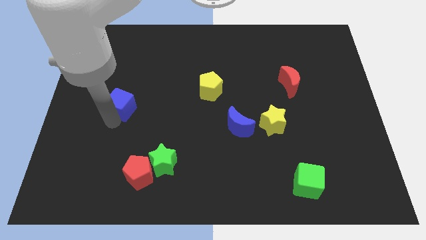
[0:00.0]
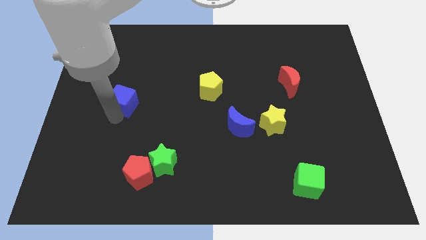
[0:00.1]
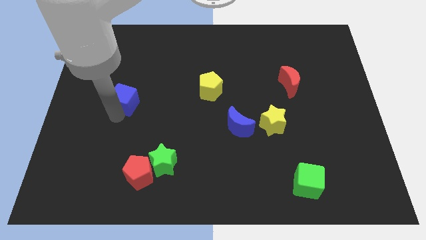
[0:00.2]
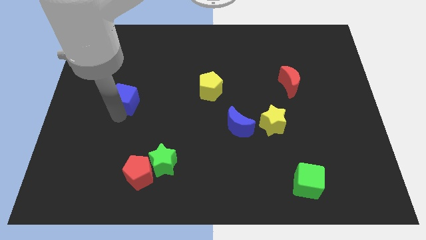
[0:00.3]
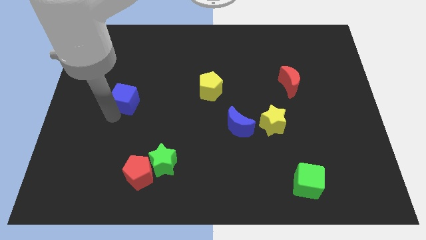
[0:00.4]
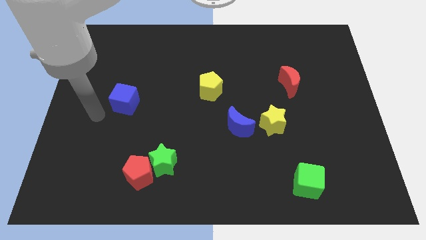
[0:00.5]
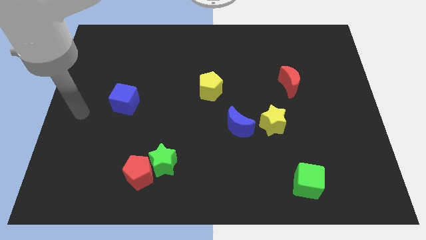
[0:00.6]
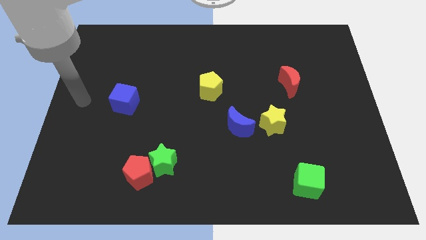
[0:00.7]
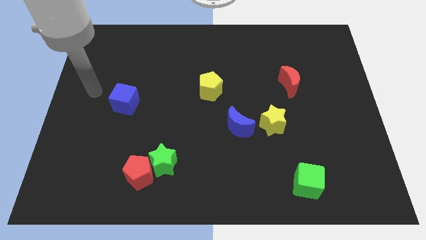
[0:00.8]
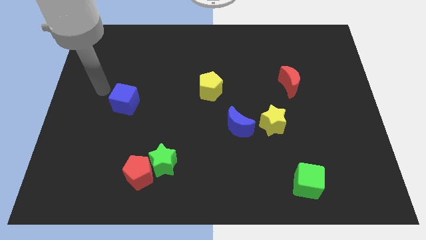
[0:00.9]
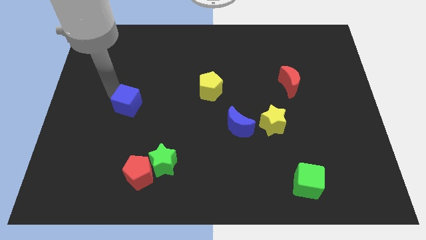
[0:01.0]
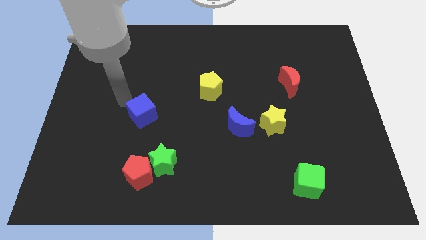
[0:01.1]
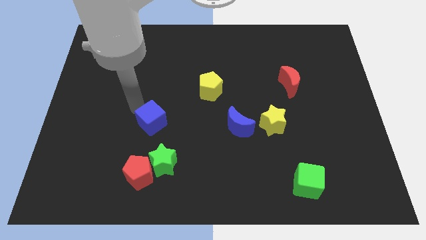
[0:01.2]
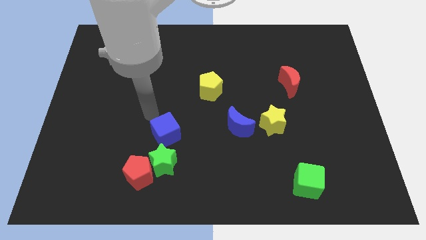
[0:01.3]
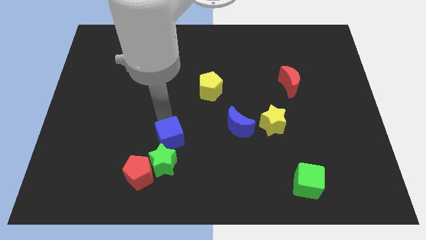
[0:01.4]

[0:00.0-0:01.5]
push the blue cube towards green star

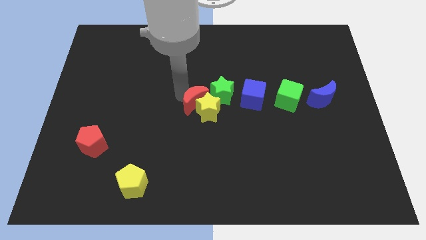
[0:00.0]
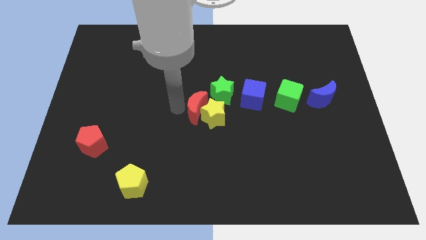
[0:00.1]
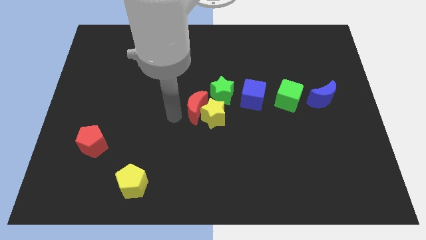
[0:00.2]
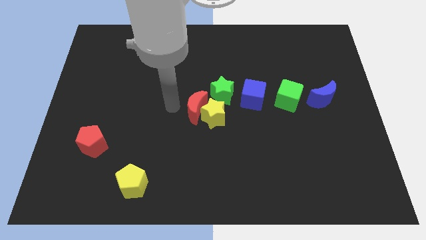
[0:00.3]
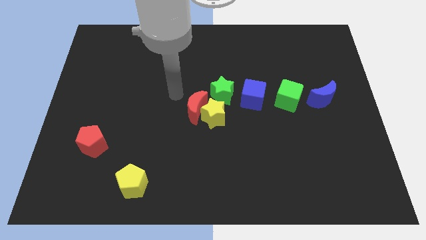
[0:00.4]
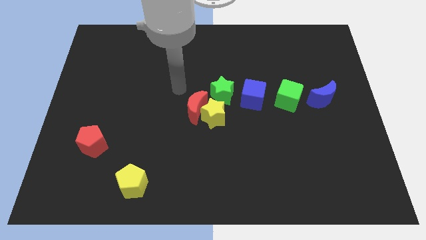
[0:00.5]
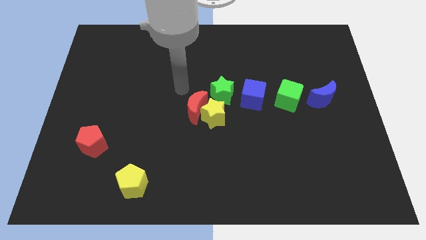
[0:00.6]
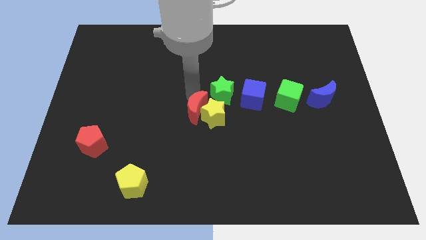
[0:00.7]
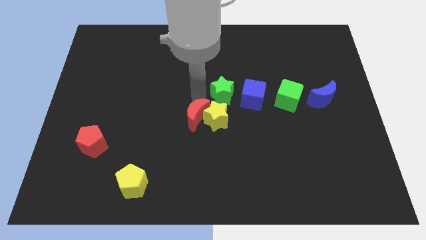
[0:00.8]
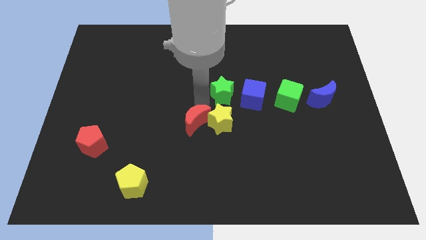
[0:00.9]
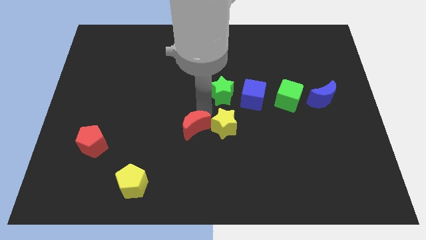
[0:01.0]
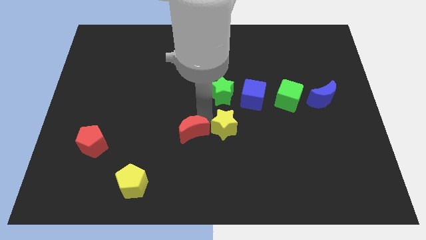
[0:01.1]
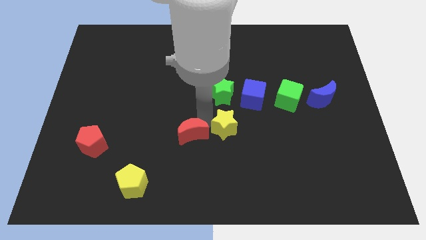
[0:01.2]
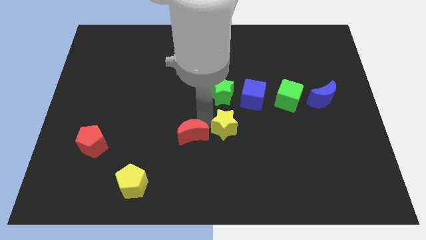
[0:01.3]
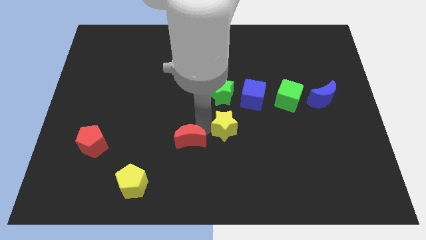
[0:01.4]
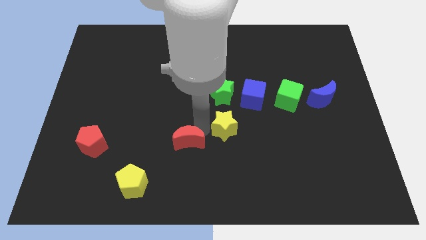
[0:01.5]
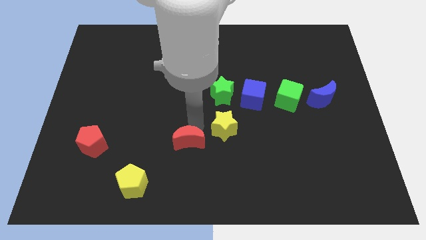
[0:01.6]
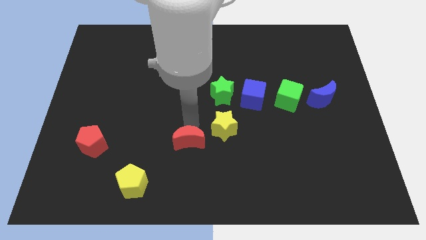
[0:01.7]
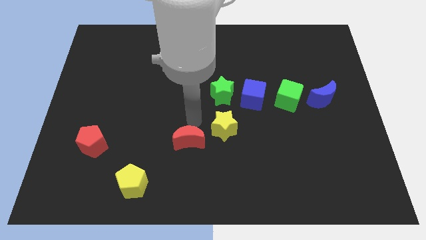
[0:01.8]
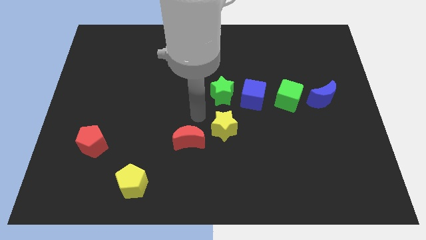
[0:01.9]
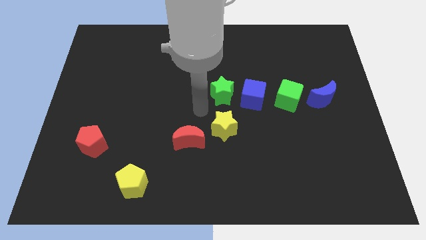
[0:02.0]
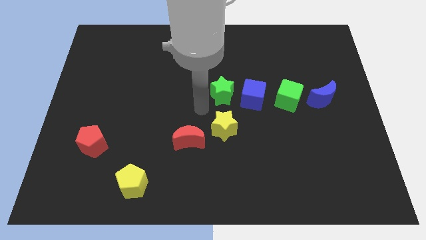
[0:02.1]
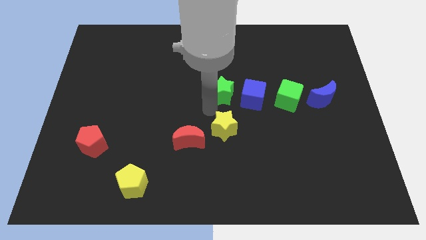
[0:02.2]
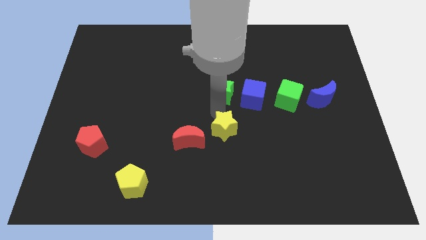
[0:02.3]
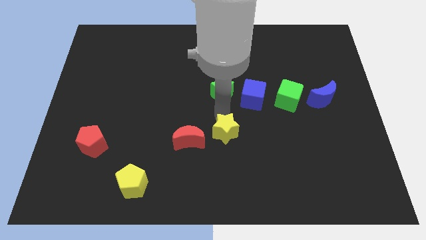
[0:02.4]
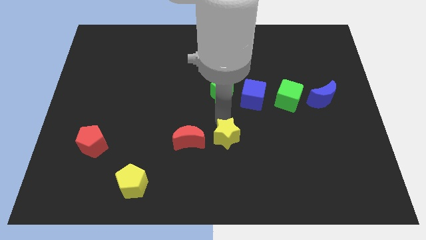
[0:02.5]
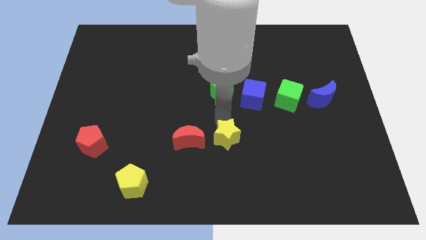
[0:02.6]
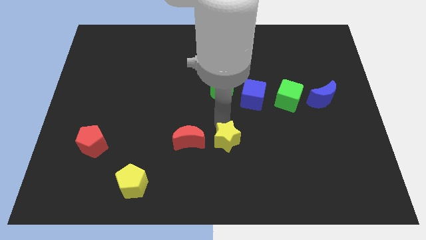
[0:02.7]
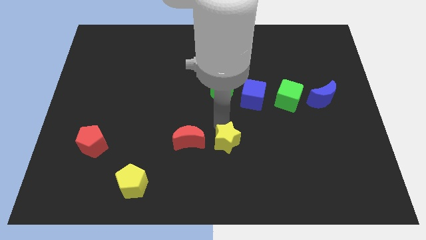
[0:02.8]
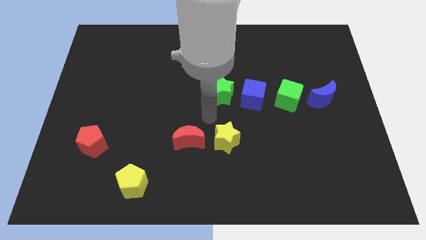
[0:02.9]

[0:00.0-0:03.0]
move red crescent towards down

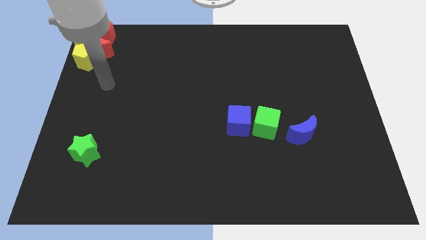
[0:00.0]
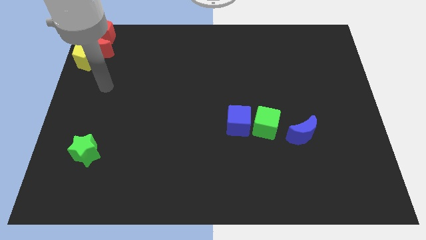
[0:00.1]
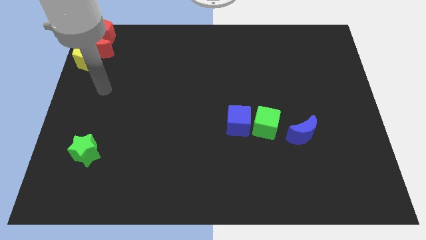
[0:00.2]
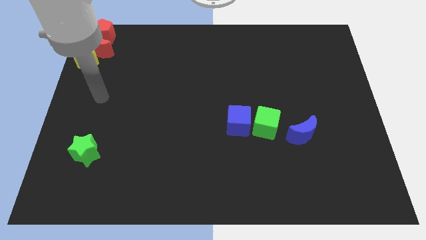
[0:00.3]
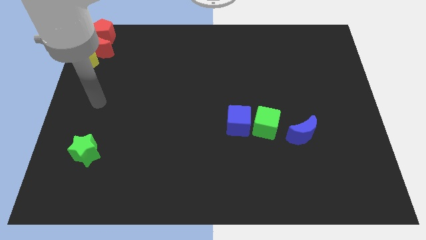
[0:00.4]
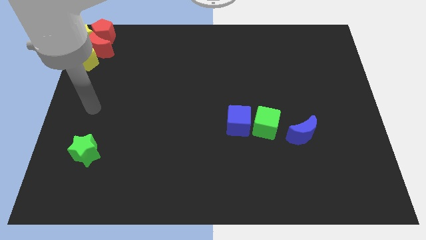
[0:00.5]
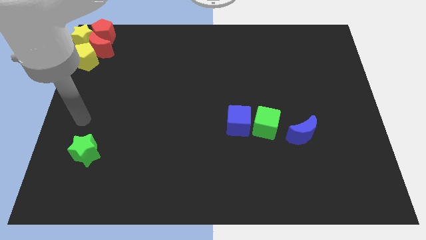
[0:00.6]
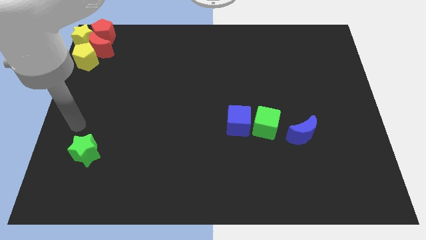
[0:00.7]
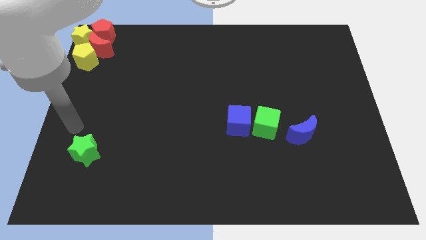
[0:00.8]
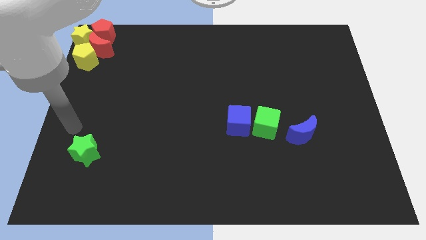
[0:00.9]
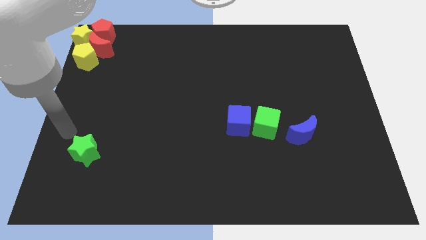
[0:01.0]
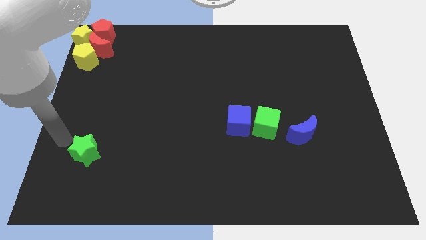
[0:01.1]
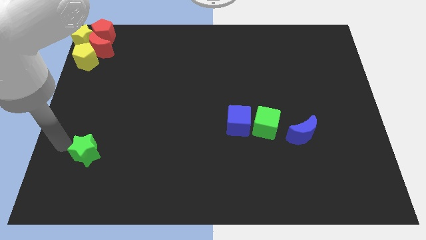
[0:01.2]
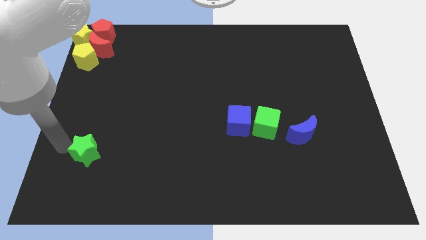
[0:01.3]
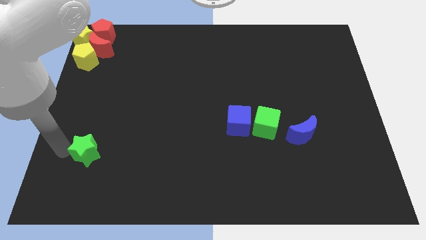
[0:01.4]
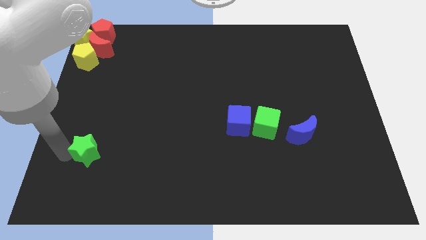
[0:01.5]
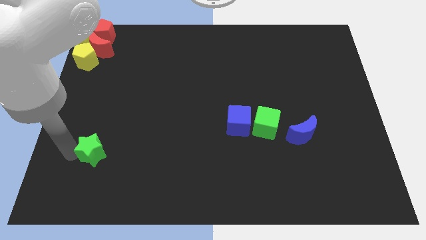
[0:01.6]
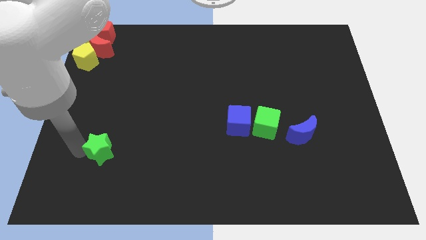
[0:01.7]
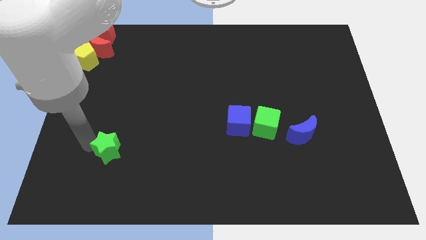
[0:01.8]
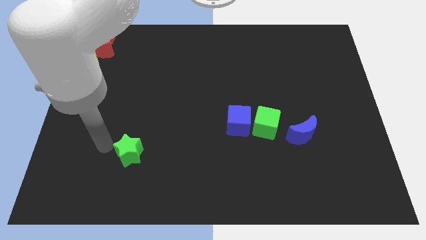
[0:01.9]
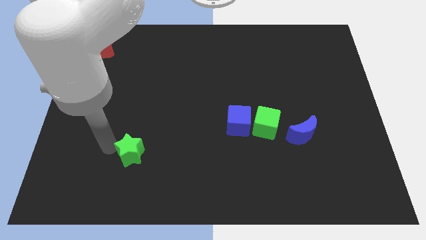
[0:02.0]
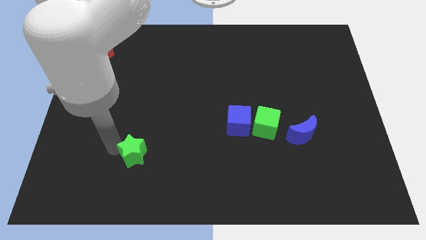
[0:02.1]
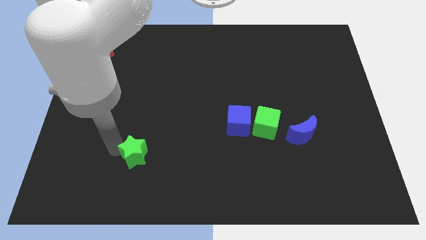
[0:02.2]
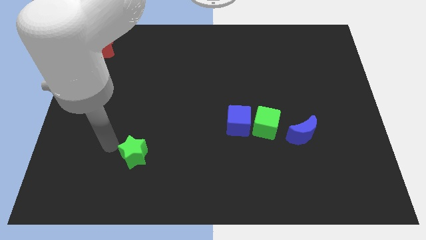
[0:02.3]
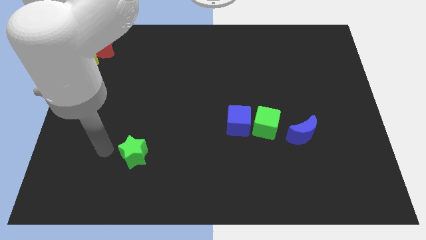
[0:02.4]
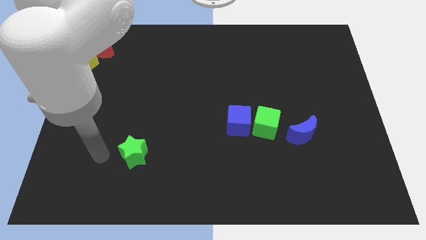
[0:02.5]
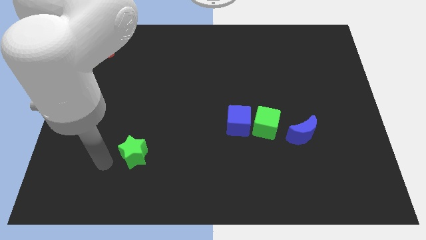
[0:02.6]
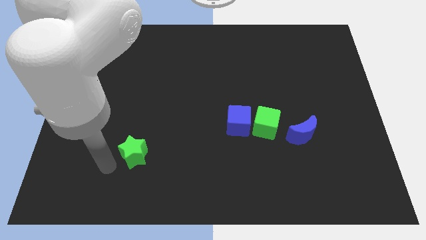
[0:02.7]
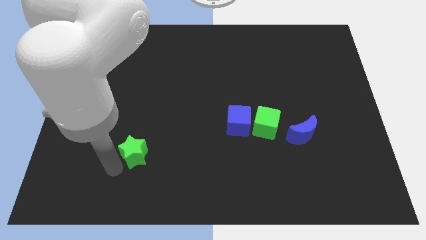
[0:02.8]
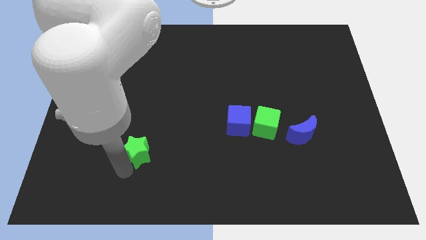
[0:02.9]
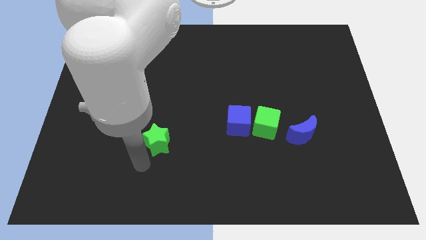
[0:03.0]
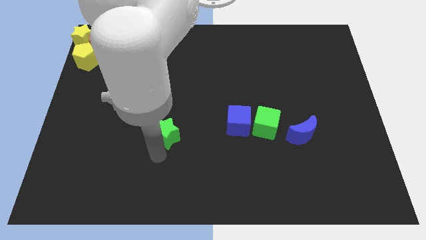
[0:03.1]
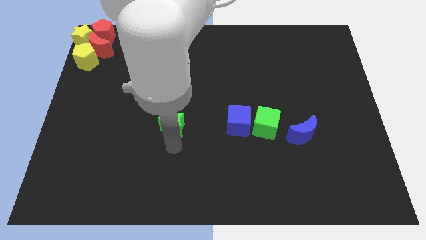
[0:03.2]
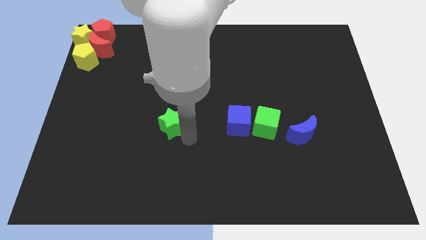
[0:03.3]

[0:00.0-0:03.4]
drag the green star towards the center of the board

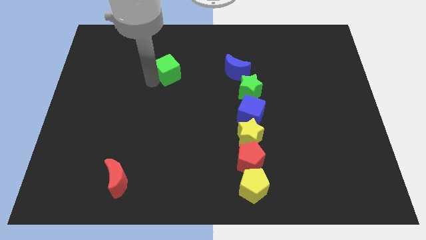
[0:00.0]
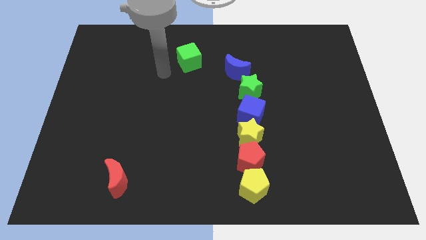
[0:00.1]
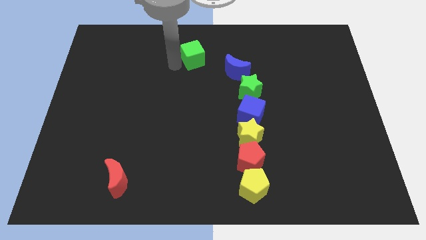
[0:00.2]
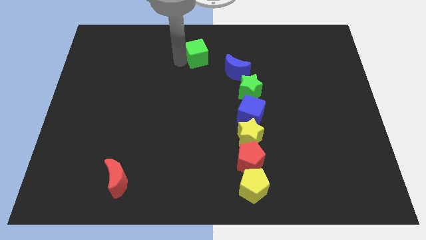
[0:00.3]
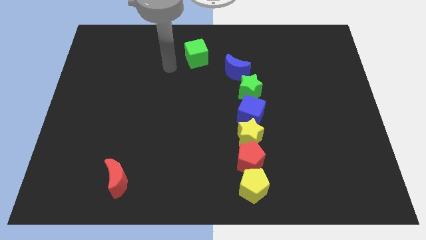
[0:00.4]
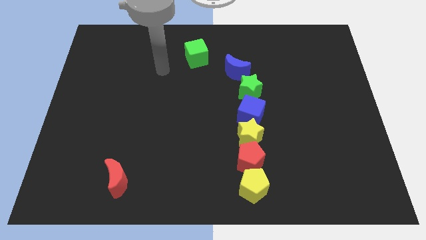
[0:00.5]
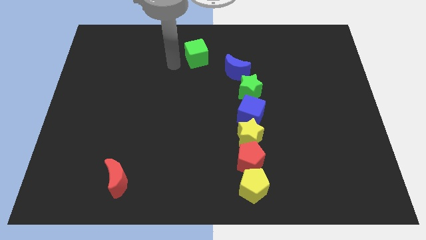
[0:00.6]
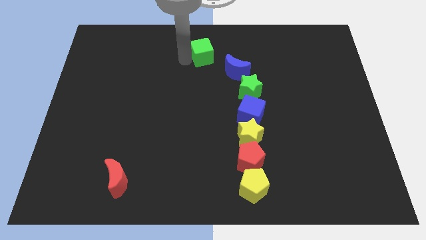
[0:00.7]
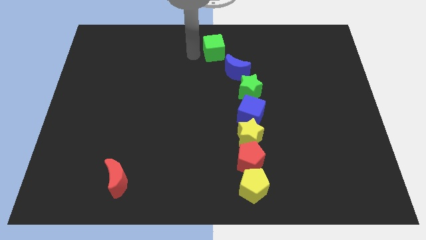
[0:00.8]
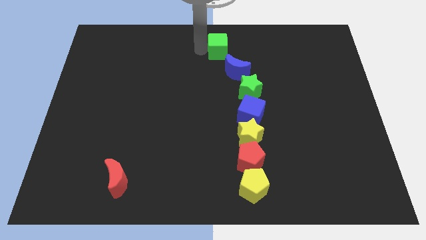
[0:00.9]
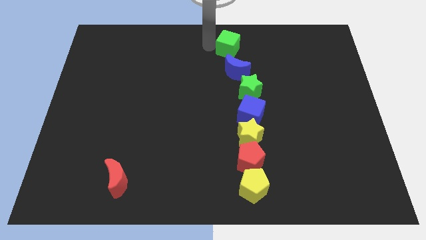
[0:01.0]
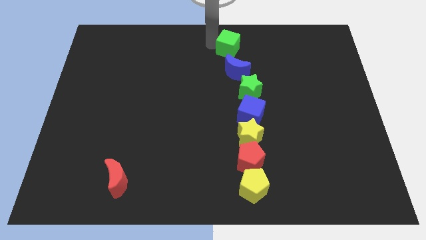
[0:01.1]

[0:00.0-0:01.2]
move the green cube at the top of the blue crescent
